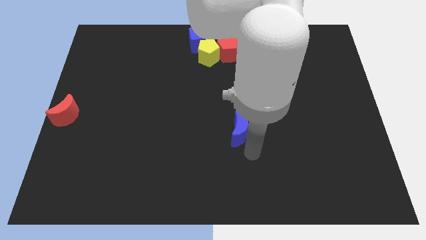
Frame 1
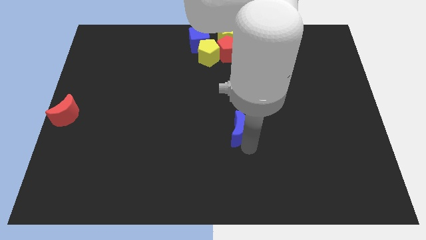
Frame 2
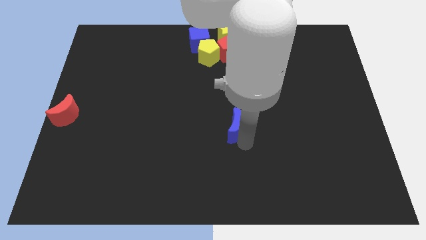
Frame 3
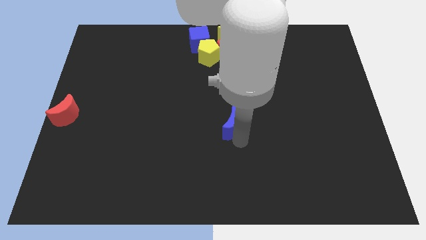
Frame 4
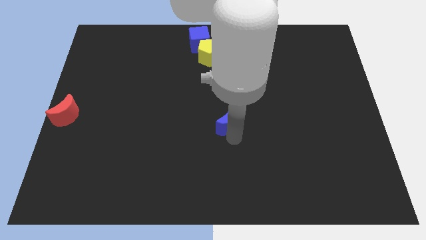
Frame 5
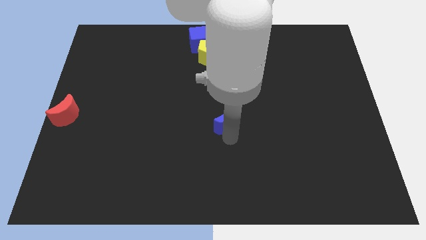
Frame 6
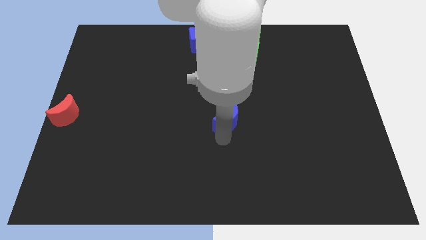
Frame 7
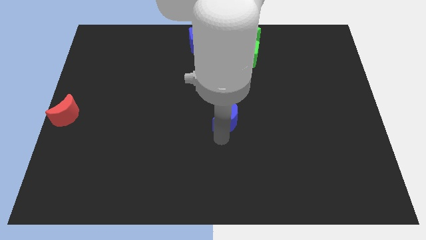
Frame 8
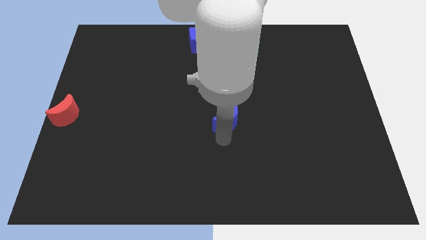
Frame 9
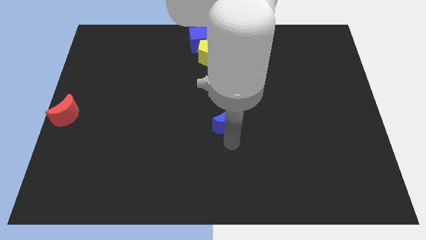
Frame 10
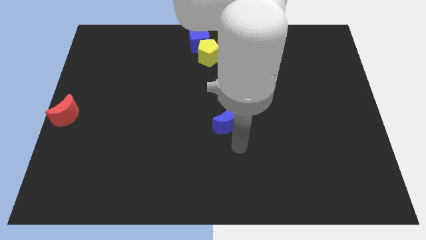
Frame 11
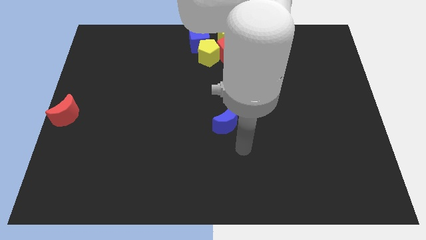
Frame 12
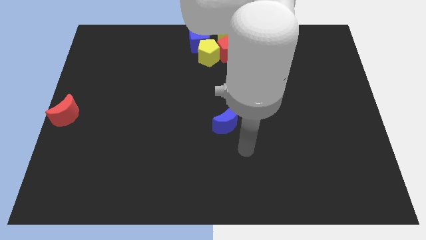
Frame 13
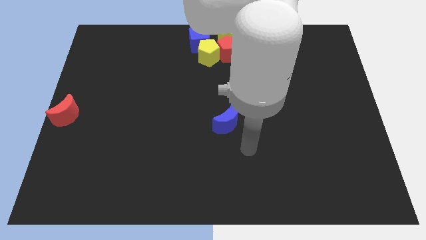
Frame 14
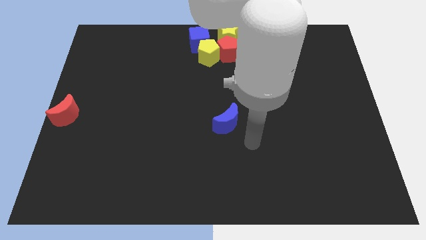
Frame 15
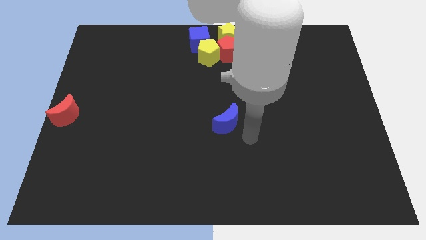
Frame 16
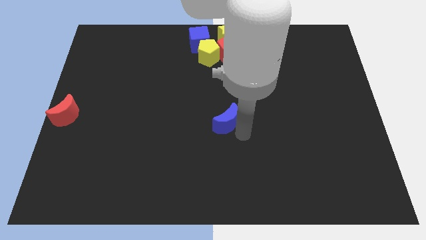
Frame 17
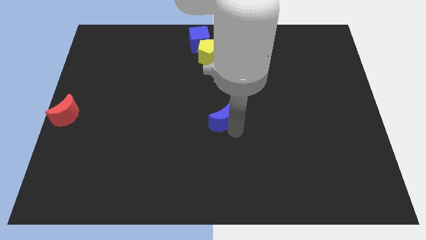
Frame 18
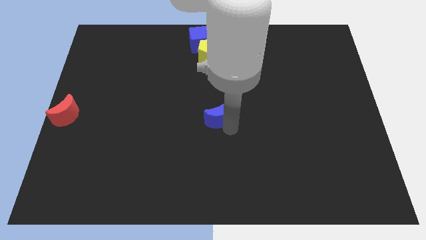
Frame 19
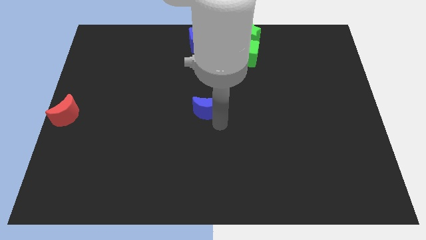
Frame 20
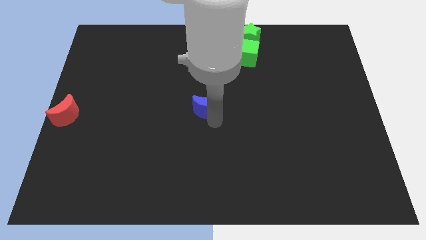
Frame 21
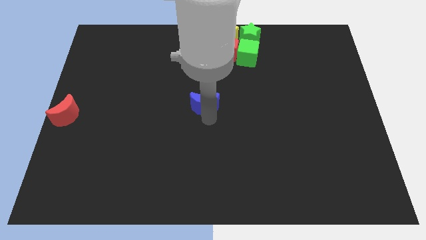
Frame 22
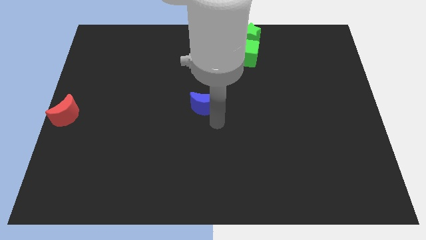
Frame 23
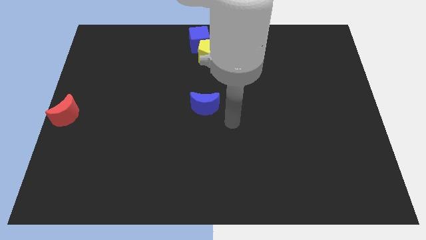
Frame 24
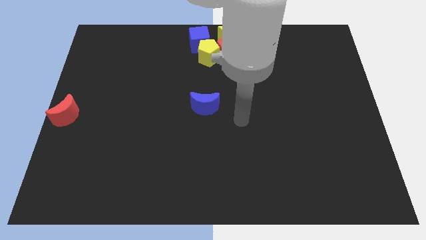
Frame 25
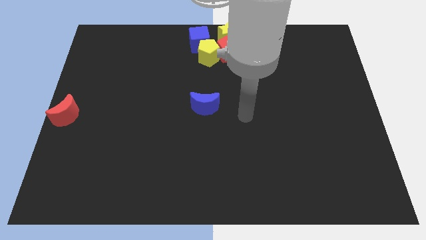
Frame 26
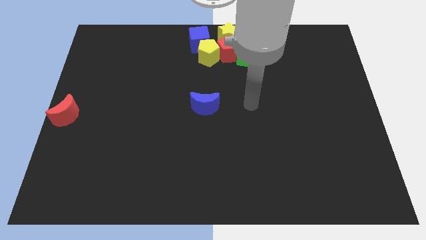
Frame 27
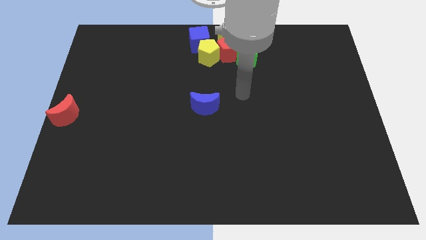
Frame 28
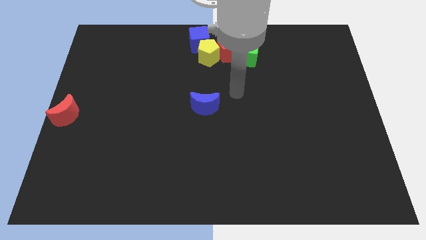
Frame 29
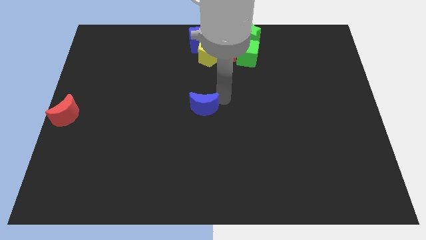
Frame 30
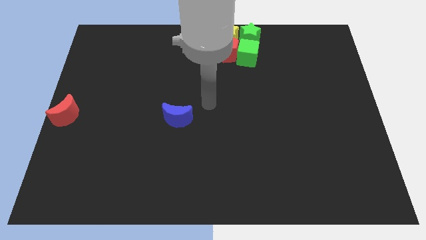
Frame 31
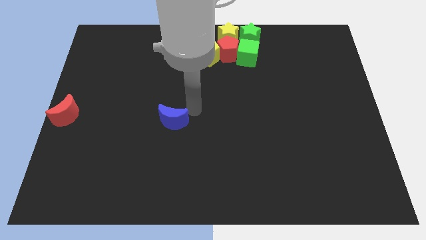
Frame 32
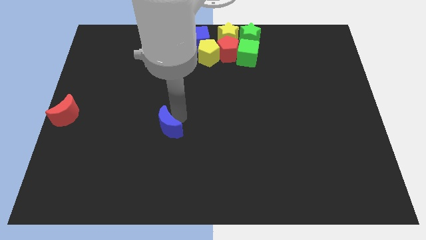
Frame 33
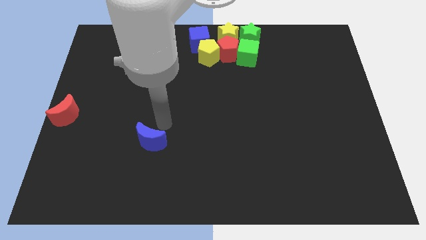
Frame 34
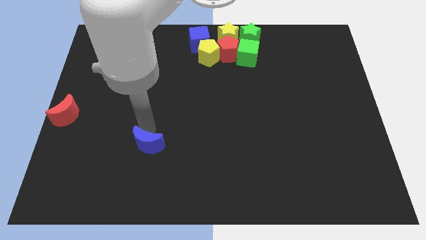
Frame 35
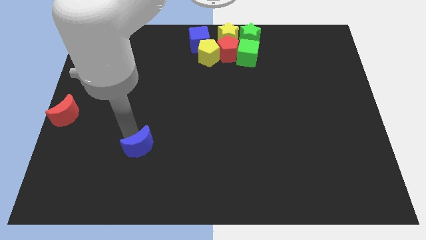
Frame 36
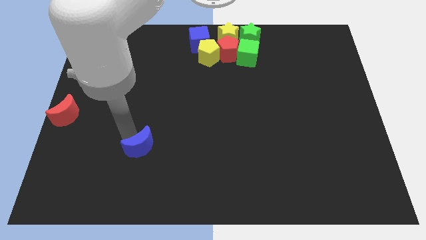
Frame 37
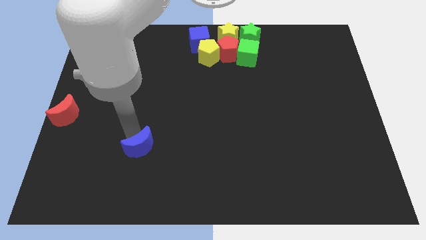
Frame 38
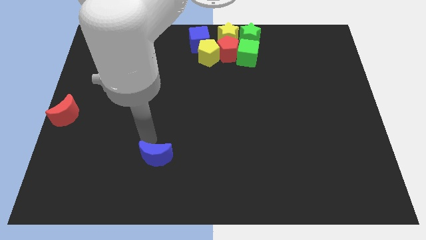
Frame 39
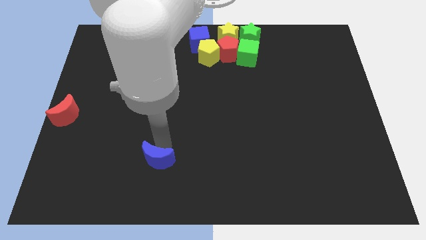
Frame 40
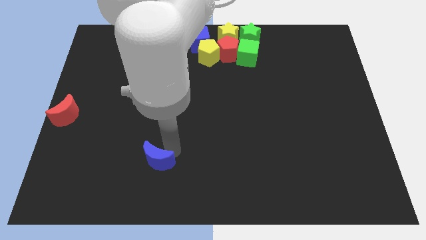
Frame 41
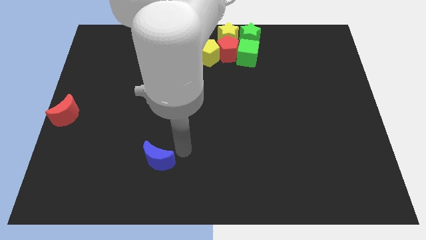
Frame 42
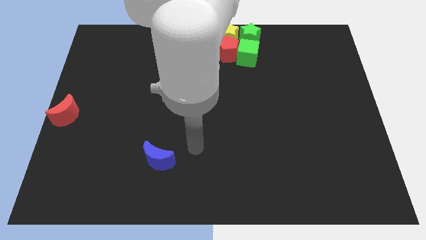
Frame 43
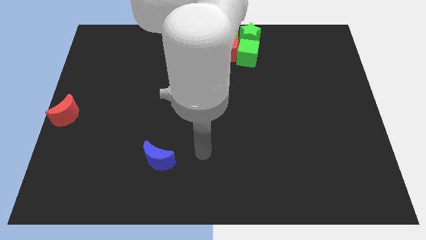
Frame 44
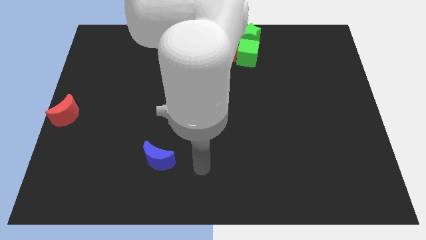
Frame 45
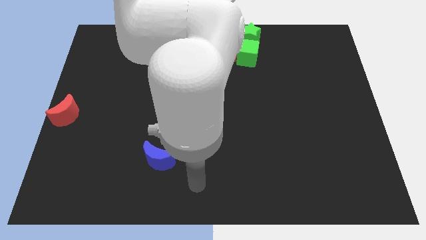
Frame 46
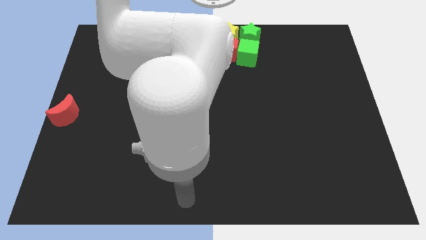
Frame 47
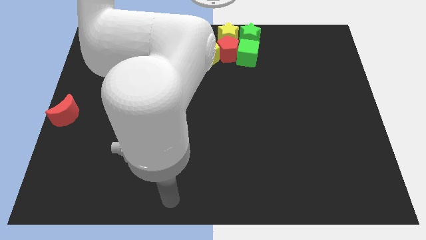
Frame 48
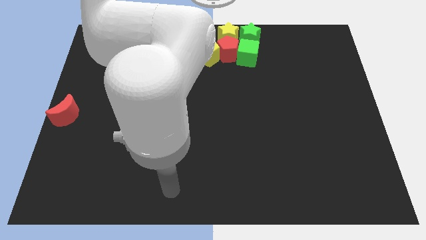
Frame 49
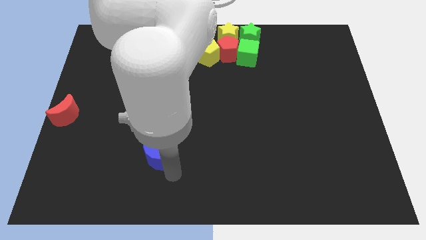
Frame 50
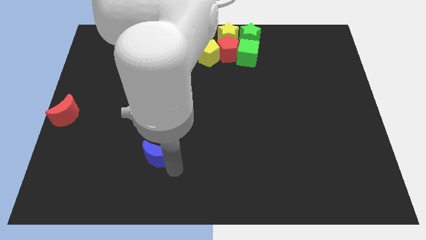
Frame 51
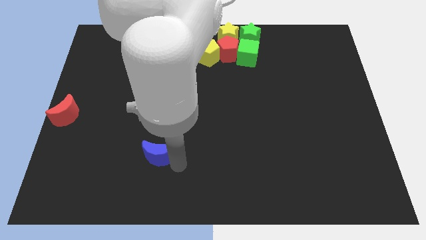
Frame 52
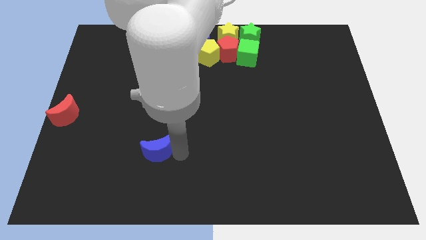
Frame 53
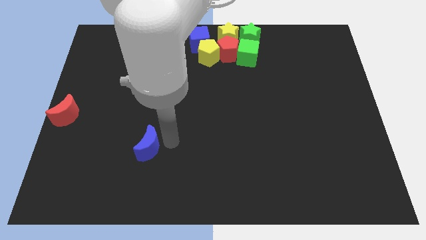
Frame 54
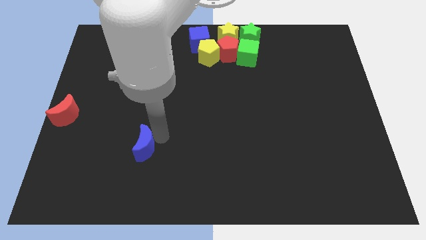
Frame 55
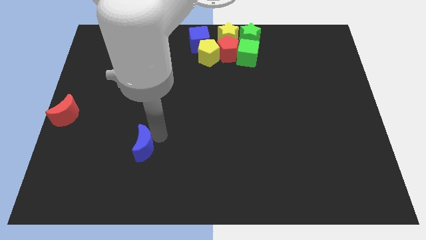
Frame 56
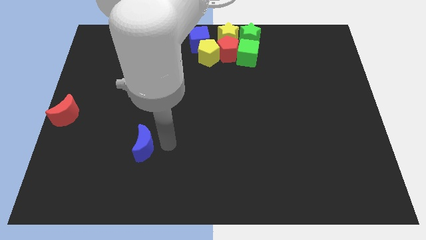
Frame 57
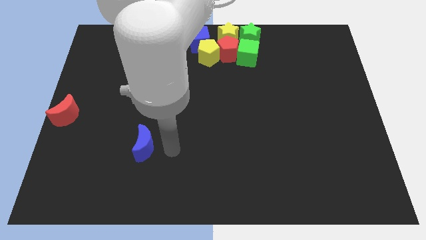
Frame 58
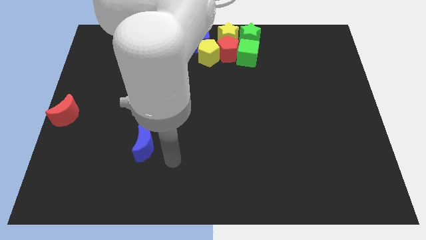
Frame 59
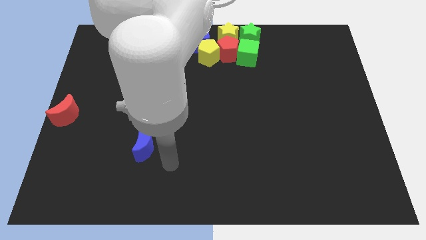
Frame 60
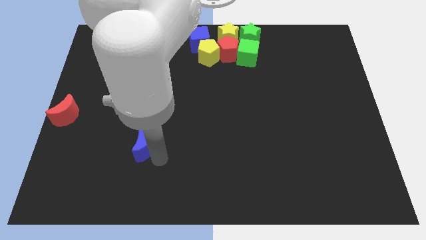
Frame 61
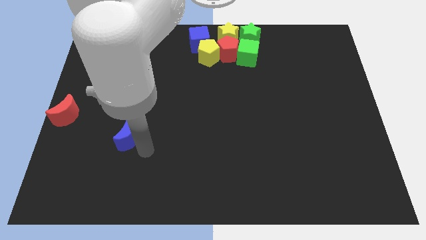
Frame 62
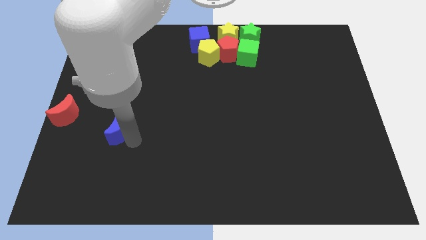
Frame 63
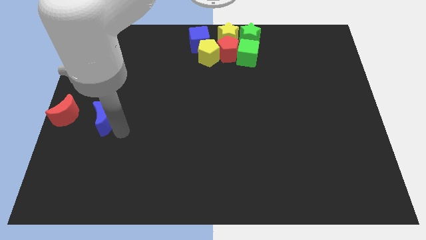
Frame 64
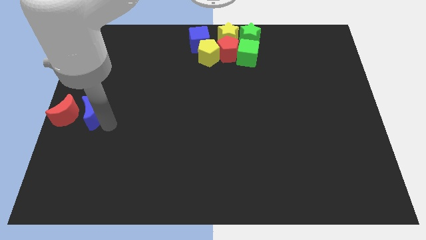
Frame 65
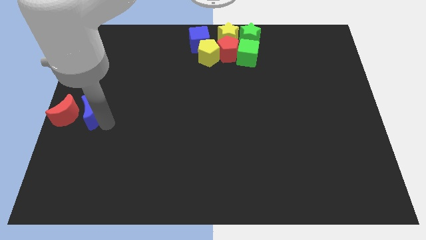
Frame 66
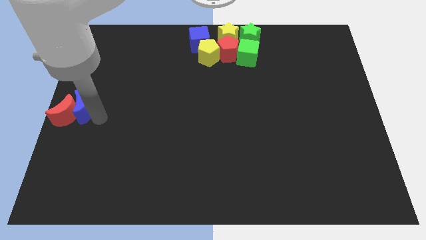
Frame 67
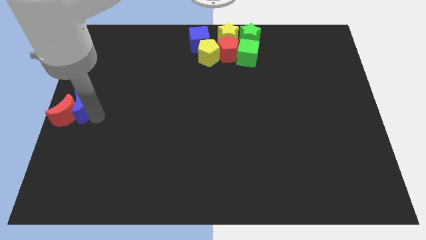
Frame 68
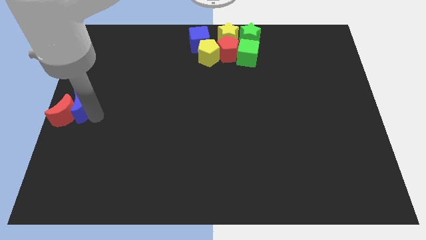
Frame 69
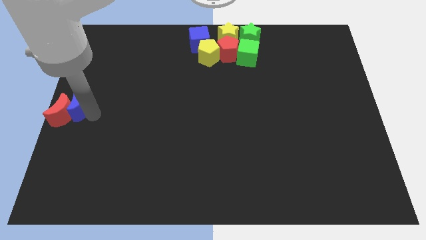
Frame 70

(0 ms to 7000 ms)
move the blue moon into right of the red moon

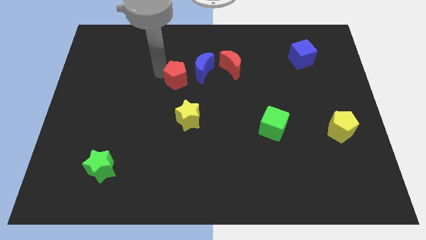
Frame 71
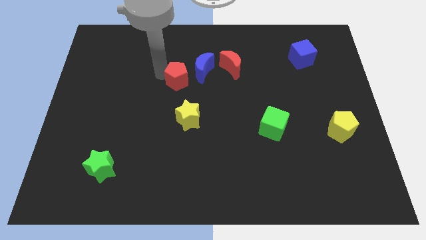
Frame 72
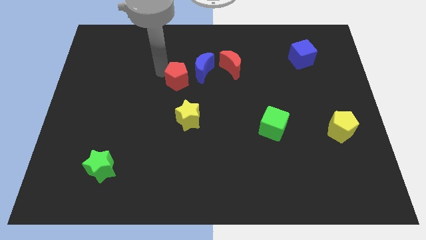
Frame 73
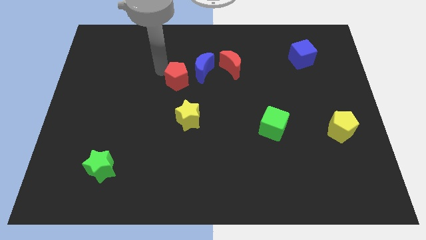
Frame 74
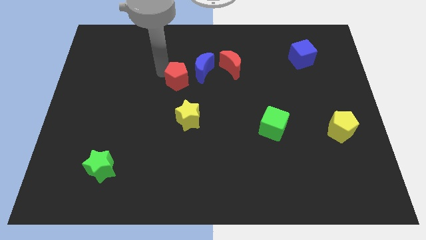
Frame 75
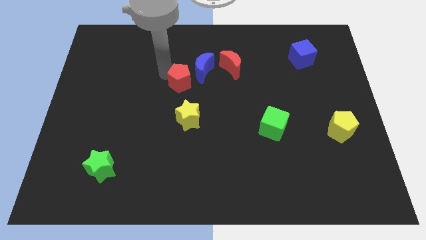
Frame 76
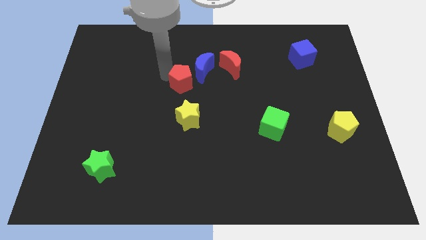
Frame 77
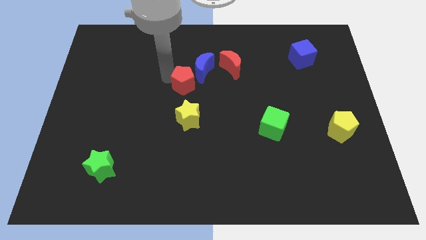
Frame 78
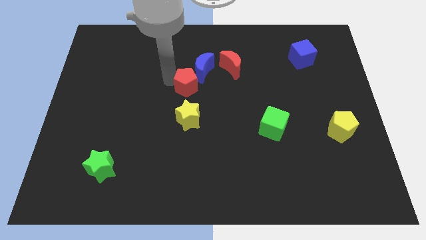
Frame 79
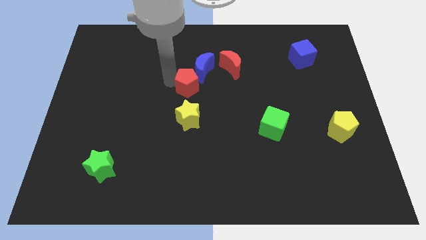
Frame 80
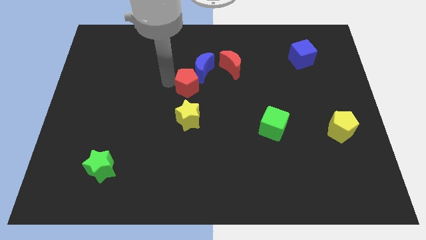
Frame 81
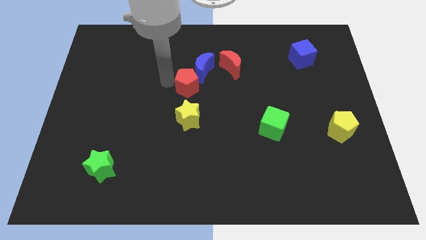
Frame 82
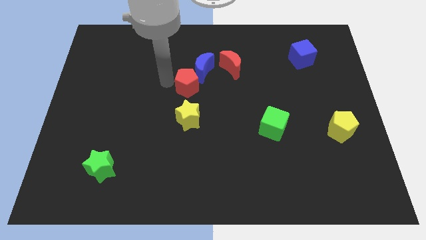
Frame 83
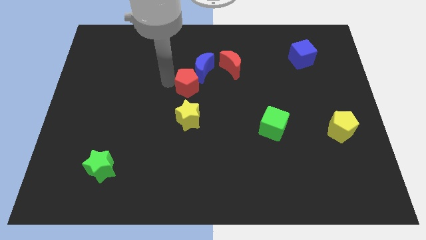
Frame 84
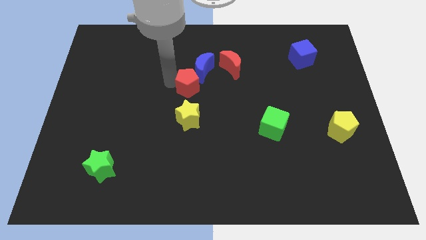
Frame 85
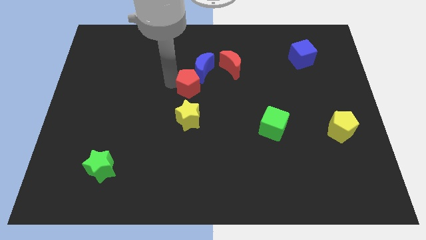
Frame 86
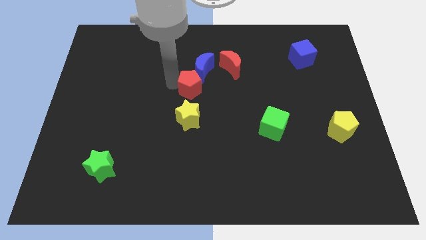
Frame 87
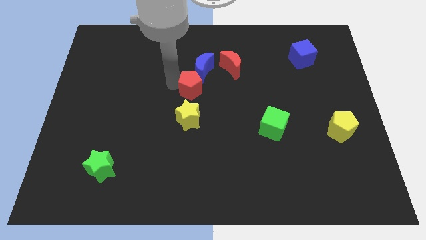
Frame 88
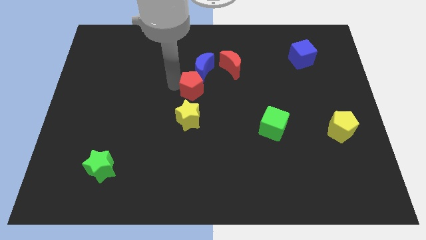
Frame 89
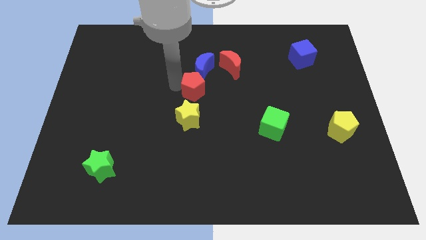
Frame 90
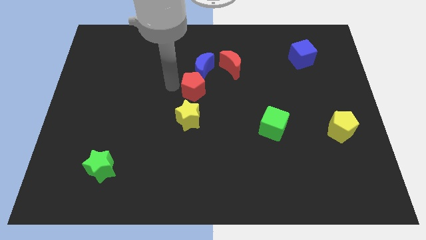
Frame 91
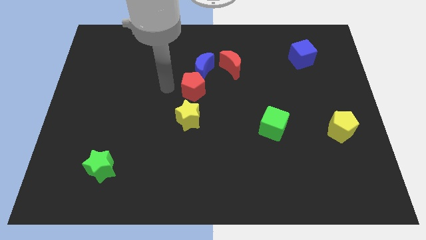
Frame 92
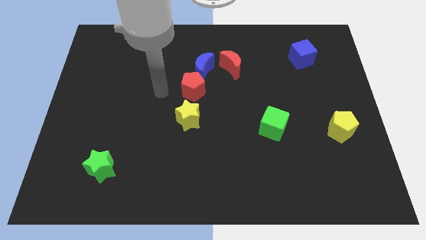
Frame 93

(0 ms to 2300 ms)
place the red pentagon in between the blue moon and yellow star
